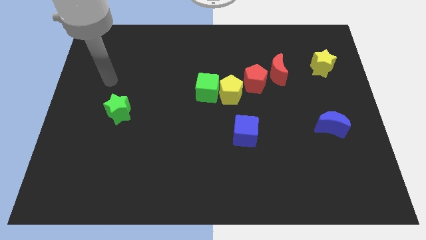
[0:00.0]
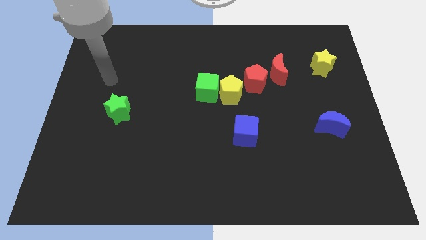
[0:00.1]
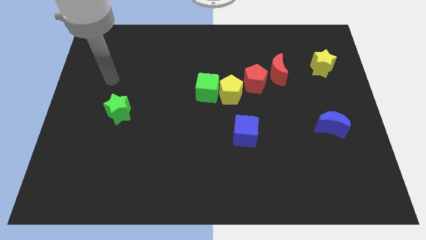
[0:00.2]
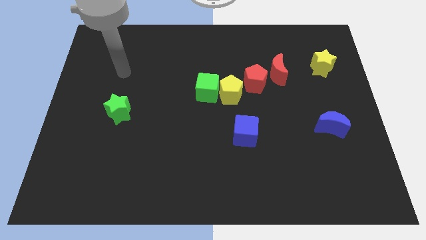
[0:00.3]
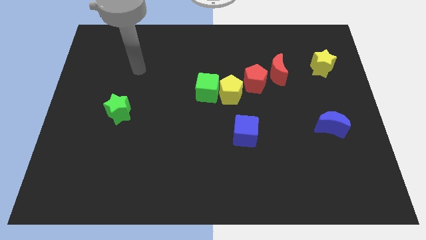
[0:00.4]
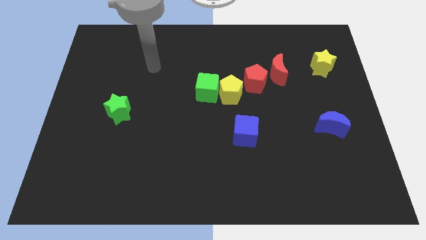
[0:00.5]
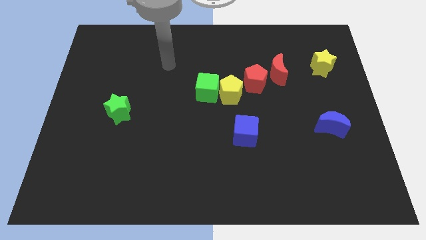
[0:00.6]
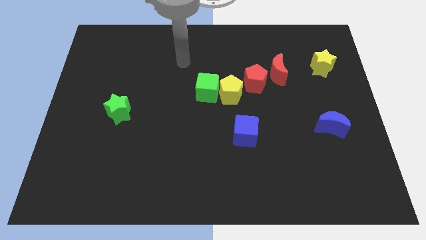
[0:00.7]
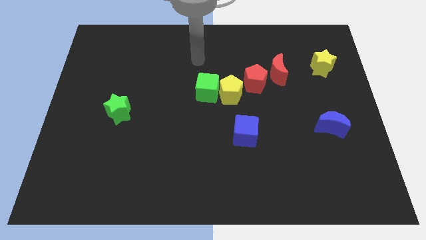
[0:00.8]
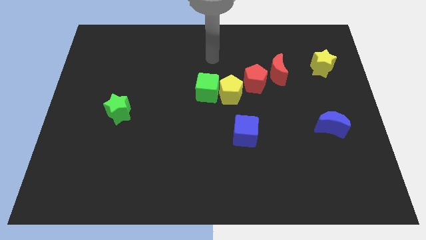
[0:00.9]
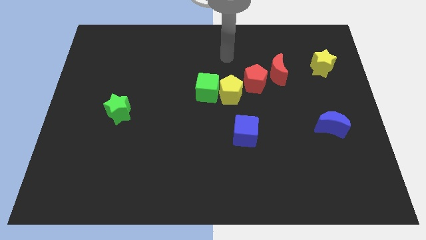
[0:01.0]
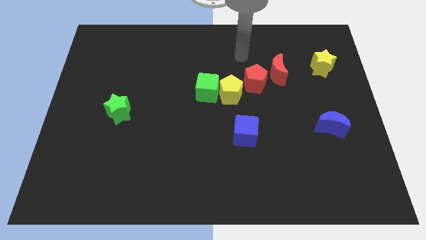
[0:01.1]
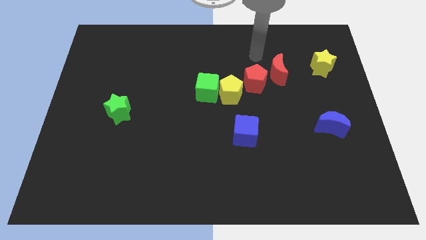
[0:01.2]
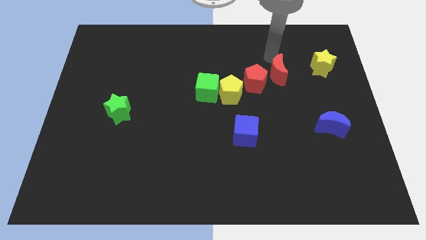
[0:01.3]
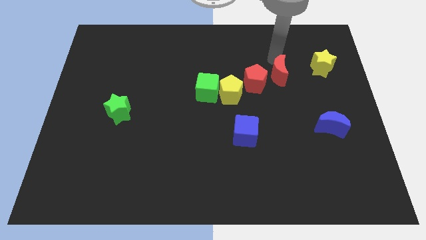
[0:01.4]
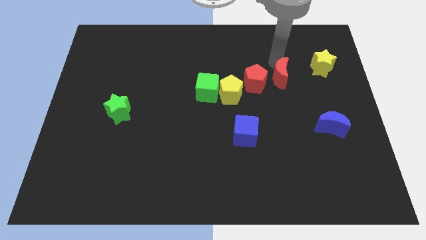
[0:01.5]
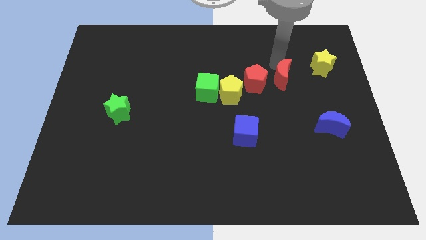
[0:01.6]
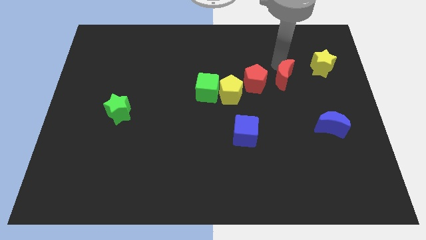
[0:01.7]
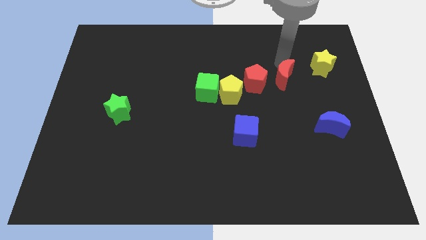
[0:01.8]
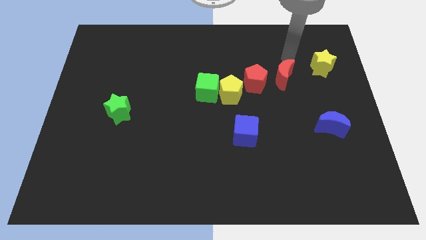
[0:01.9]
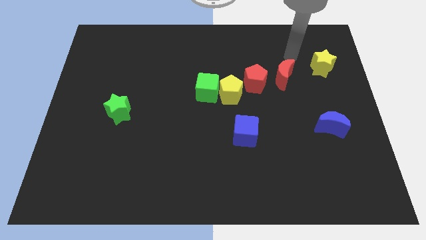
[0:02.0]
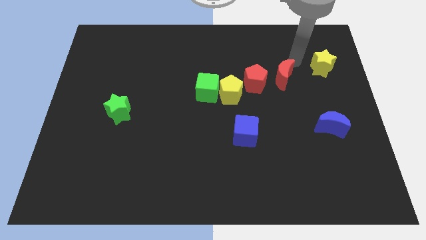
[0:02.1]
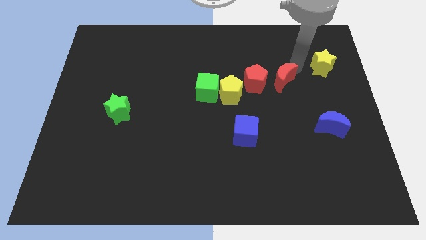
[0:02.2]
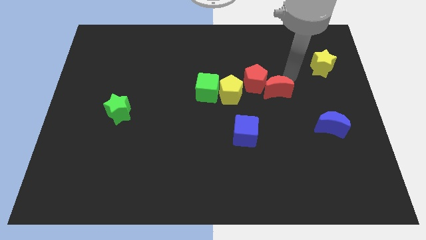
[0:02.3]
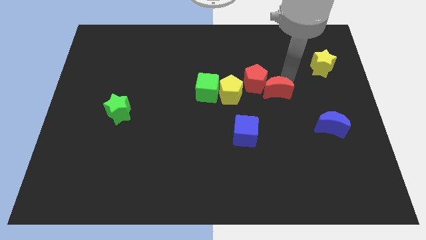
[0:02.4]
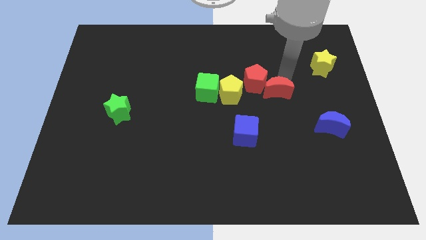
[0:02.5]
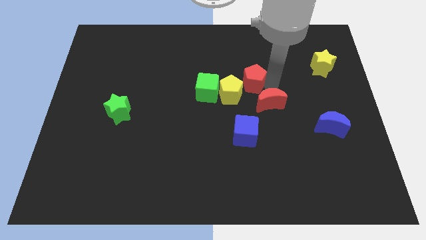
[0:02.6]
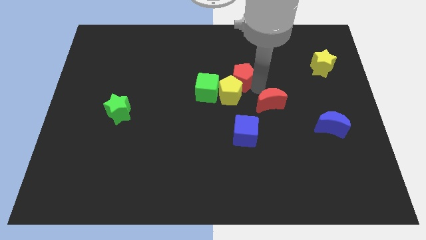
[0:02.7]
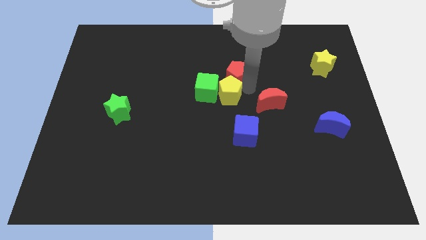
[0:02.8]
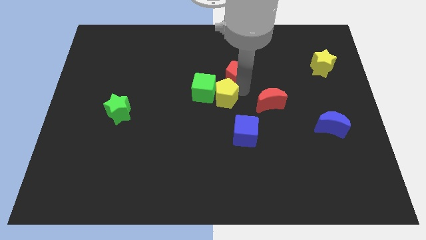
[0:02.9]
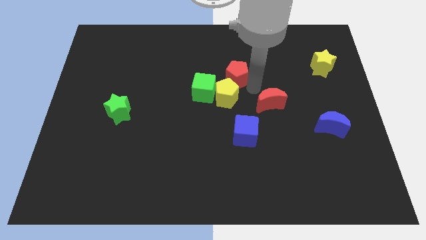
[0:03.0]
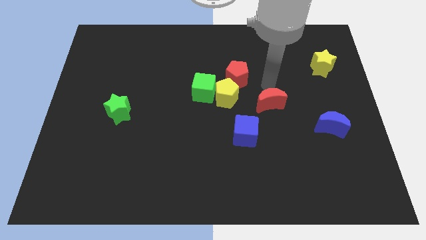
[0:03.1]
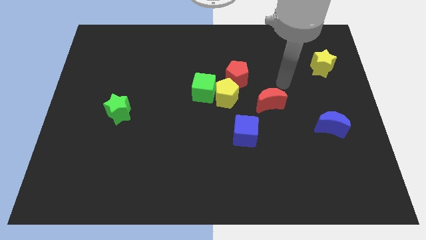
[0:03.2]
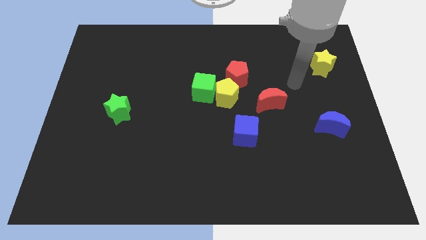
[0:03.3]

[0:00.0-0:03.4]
move the red moon diagonally top right to the blue cube

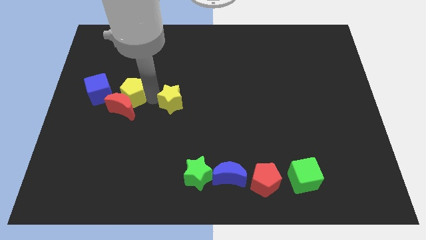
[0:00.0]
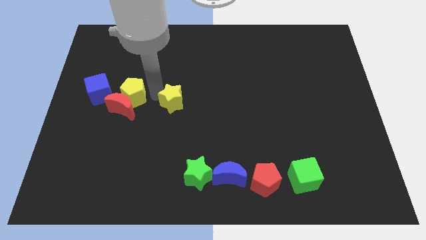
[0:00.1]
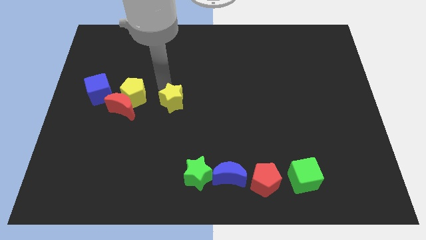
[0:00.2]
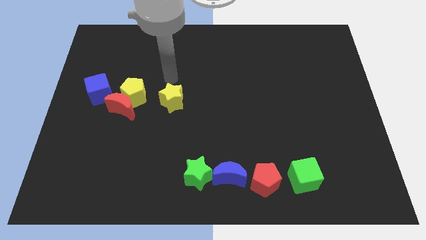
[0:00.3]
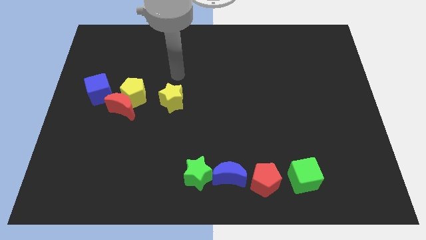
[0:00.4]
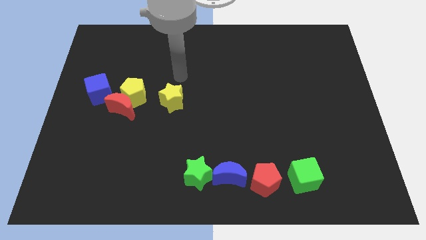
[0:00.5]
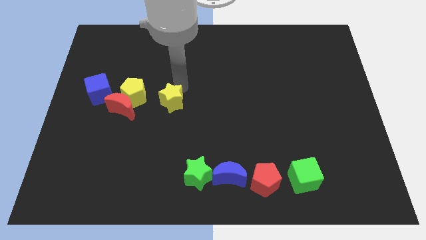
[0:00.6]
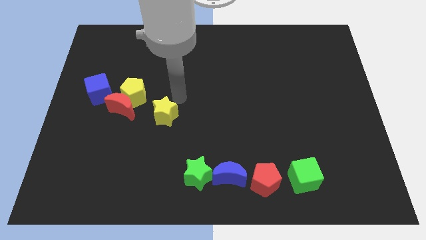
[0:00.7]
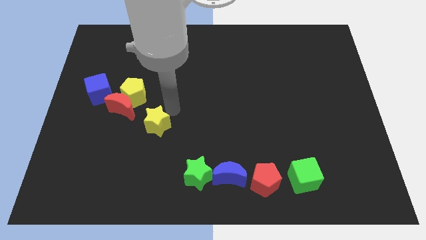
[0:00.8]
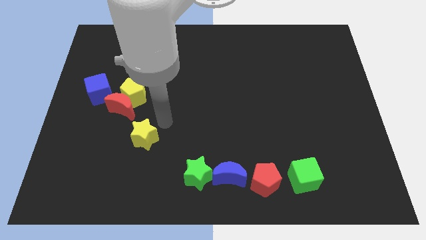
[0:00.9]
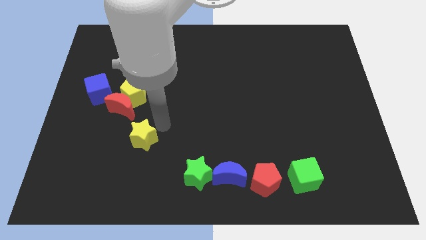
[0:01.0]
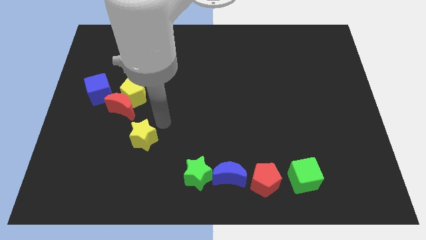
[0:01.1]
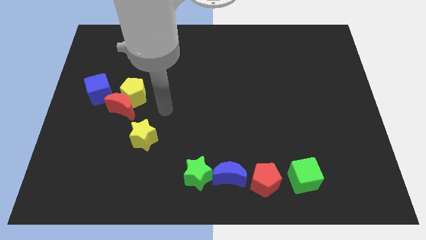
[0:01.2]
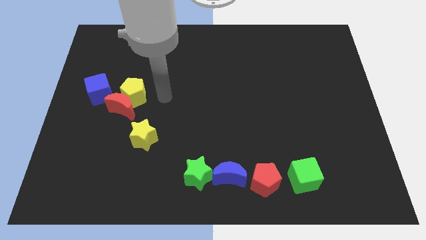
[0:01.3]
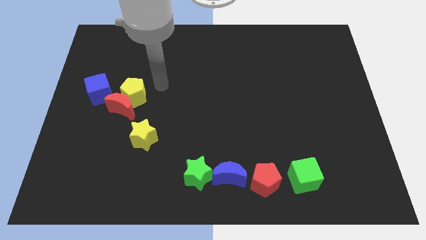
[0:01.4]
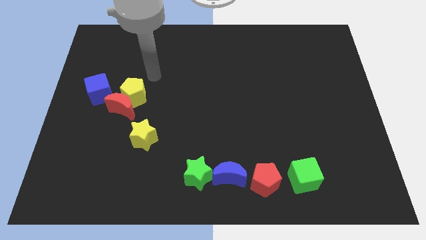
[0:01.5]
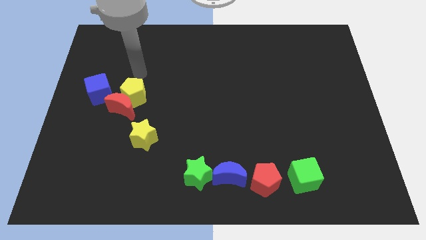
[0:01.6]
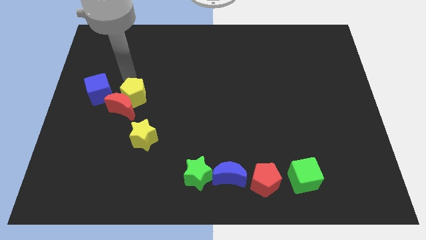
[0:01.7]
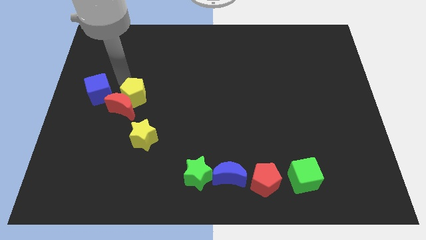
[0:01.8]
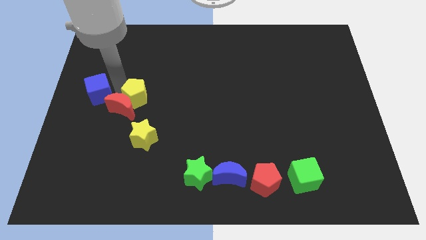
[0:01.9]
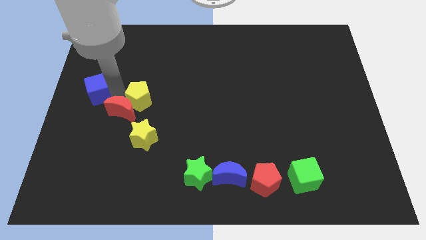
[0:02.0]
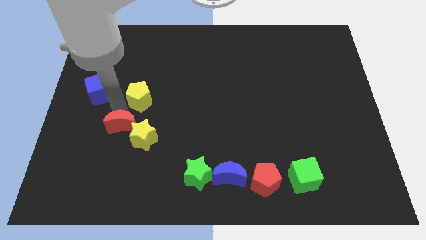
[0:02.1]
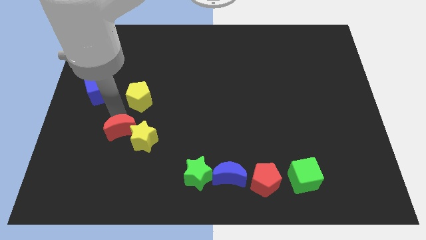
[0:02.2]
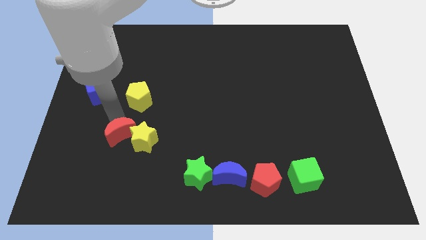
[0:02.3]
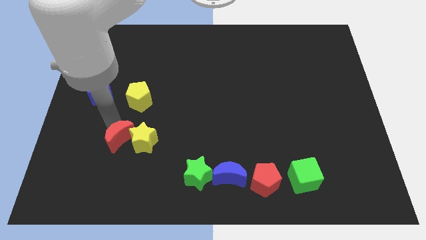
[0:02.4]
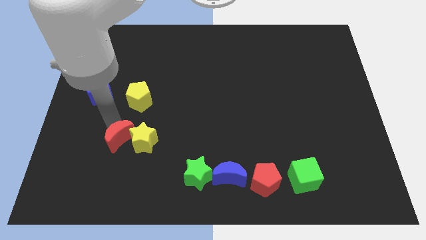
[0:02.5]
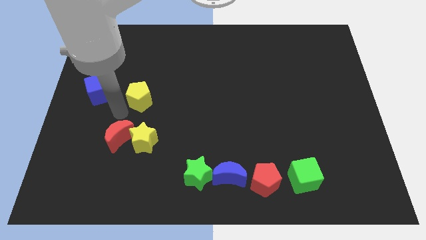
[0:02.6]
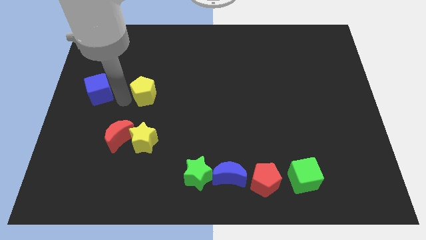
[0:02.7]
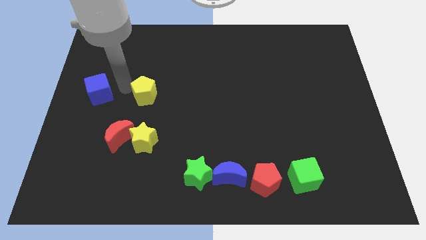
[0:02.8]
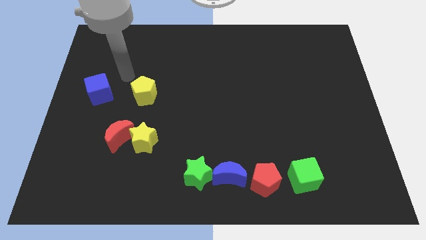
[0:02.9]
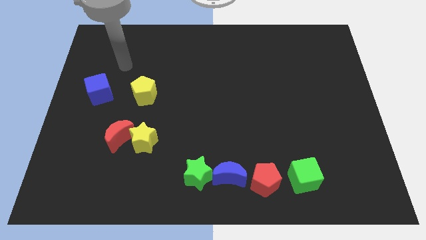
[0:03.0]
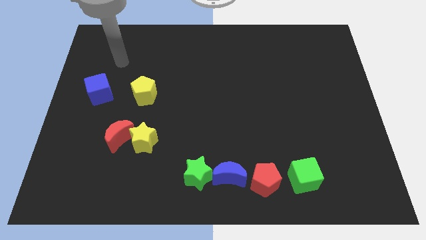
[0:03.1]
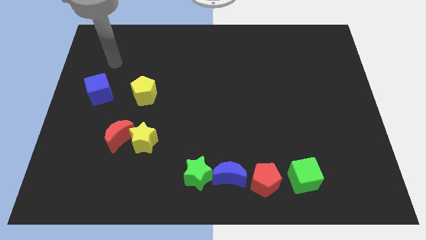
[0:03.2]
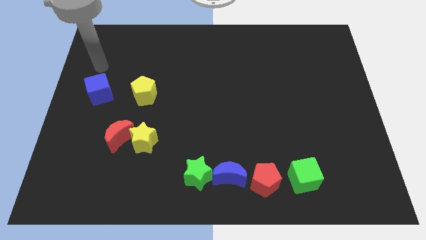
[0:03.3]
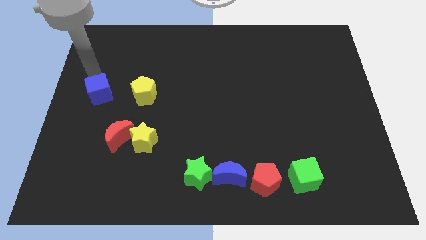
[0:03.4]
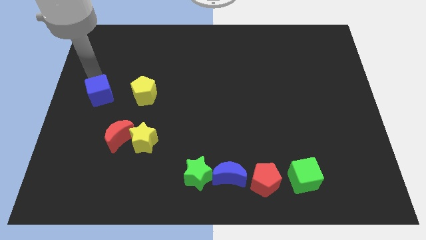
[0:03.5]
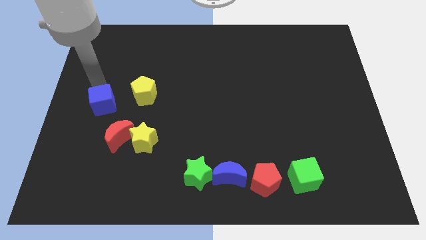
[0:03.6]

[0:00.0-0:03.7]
push the red crescent and yellow star towards bottom

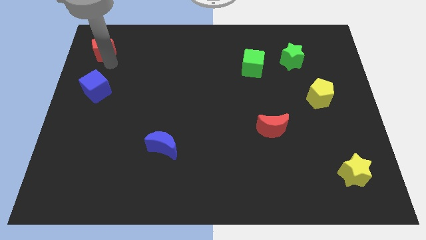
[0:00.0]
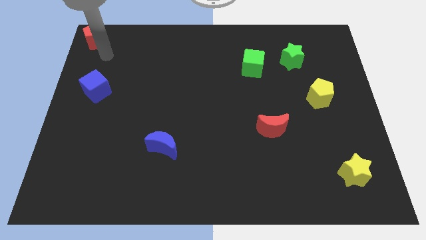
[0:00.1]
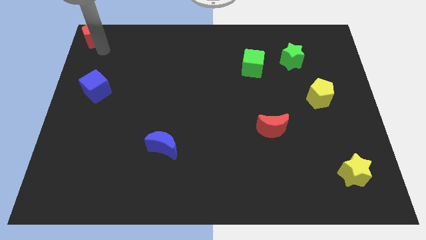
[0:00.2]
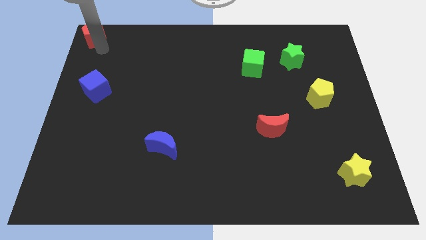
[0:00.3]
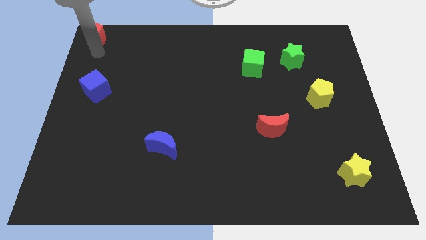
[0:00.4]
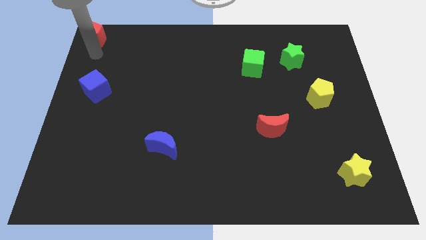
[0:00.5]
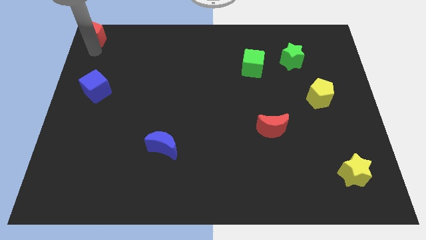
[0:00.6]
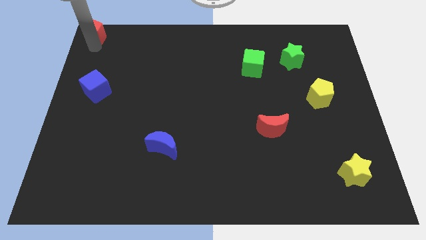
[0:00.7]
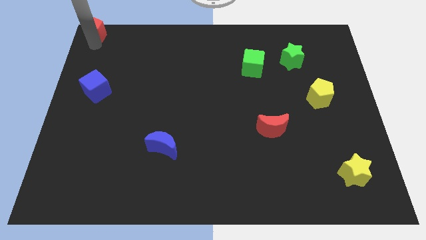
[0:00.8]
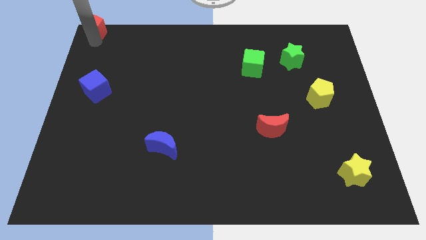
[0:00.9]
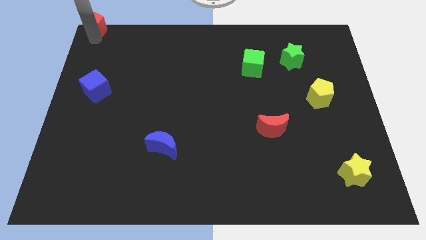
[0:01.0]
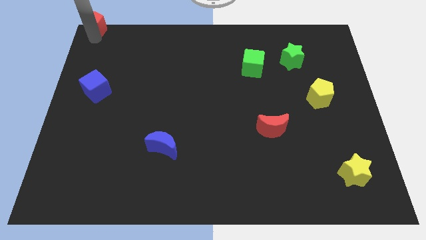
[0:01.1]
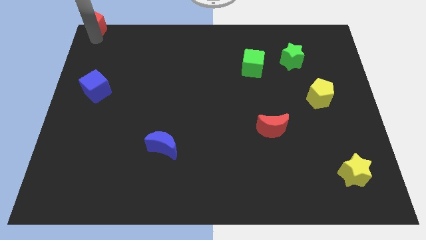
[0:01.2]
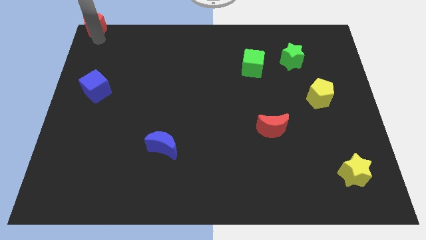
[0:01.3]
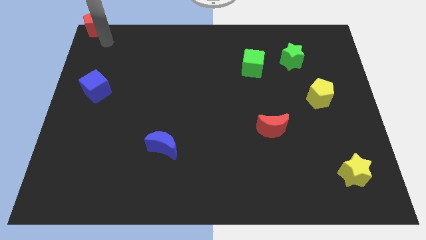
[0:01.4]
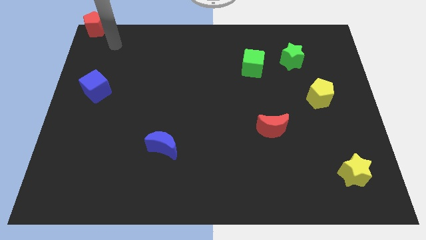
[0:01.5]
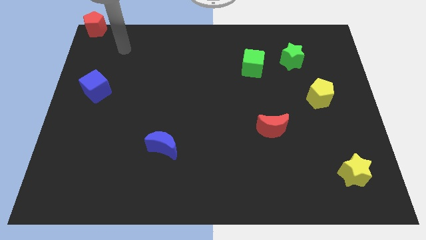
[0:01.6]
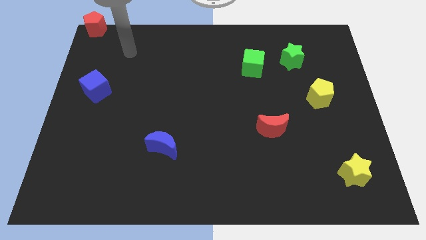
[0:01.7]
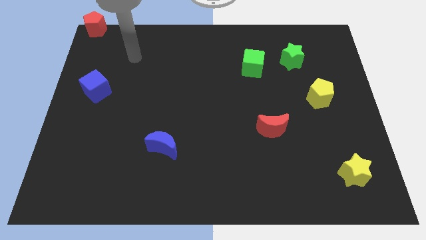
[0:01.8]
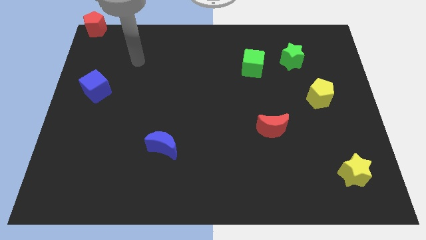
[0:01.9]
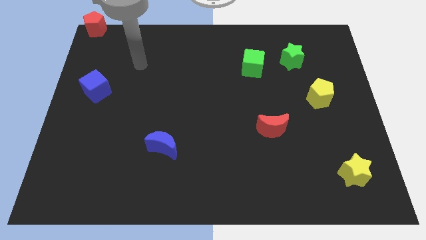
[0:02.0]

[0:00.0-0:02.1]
place the red pentagon on the top left of the board
